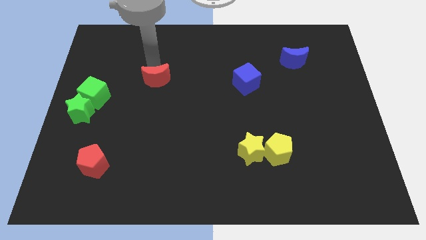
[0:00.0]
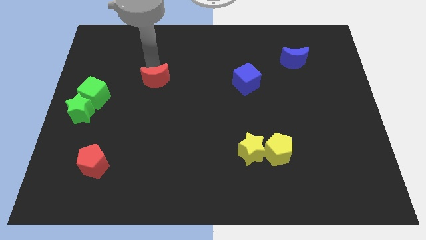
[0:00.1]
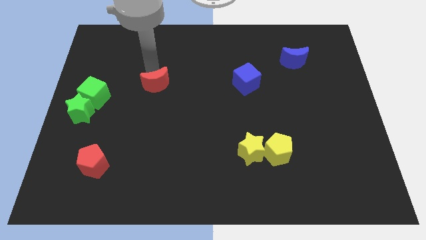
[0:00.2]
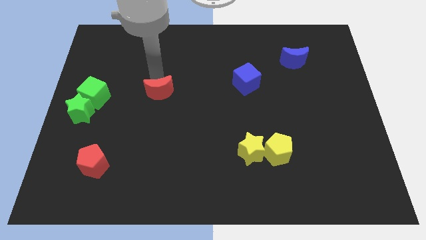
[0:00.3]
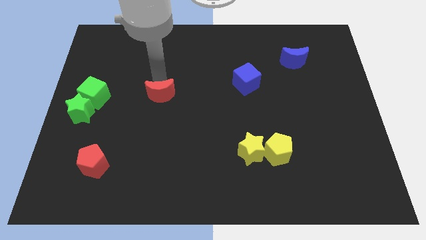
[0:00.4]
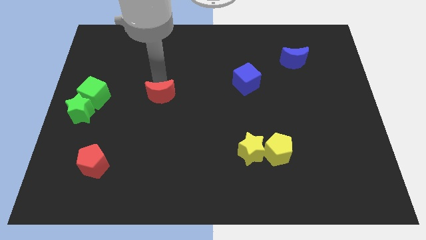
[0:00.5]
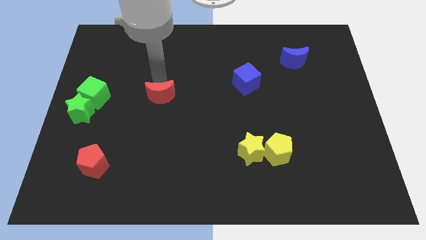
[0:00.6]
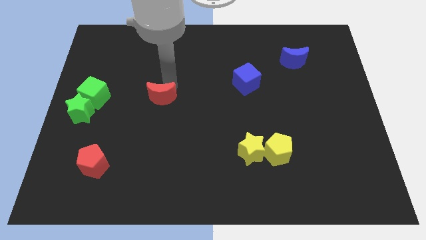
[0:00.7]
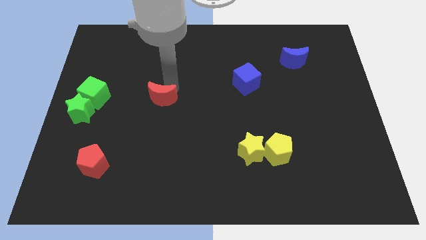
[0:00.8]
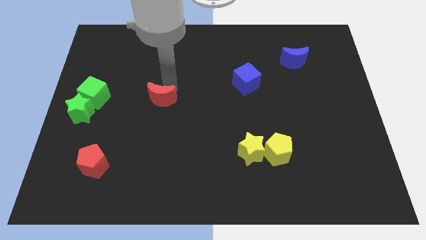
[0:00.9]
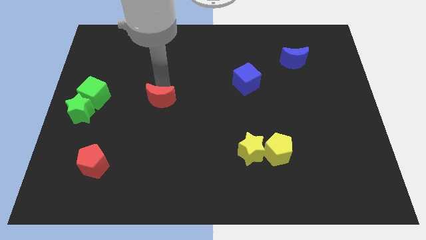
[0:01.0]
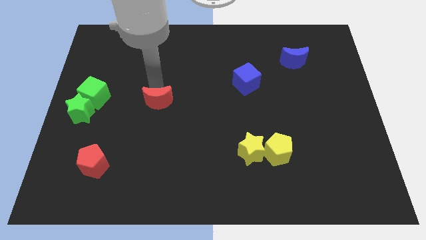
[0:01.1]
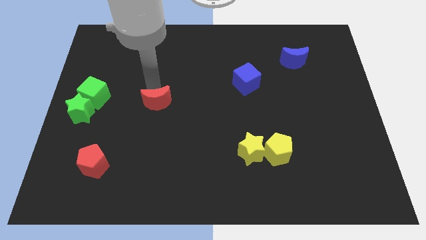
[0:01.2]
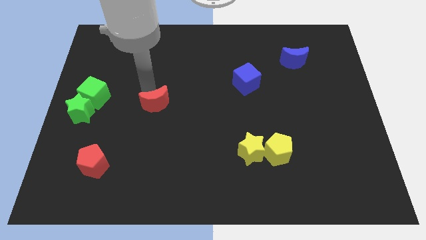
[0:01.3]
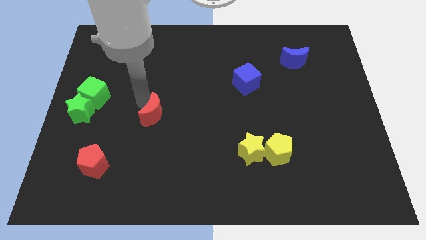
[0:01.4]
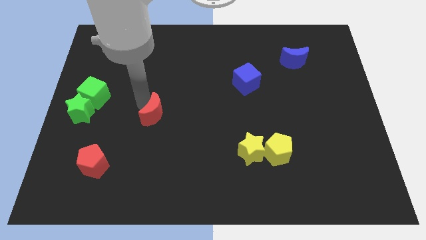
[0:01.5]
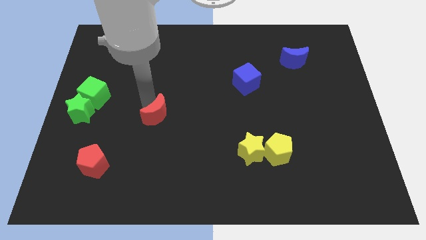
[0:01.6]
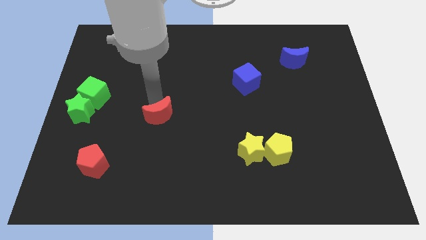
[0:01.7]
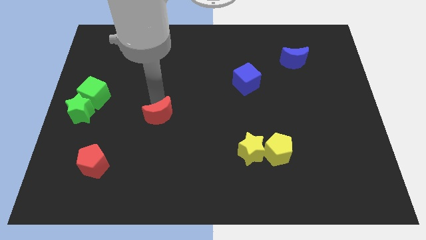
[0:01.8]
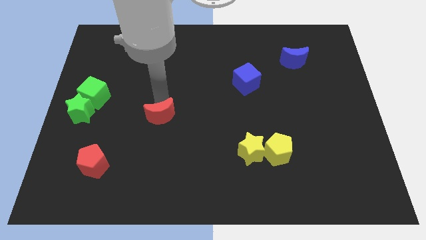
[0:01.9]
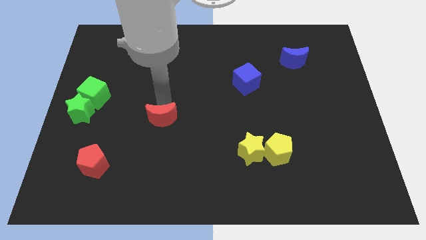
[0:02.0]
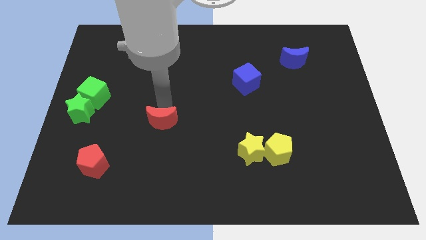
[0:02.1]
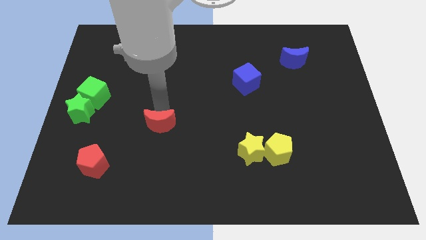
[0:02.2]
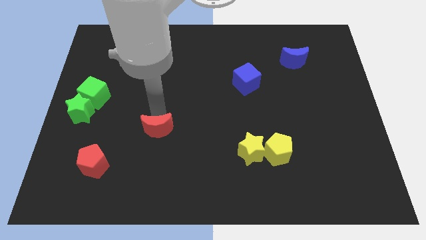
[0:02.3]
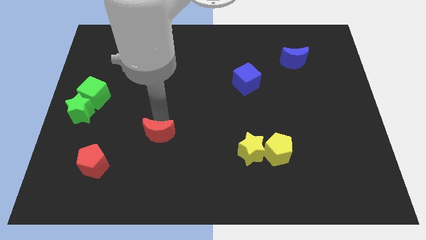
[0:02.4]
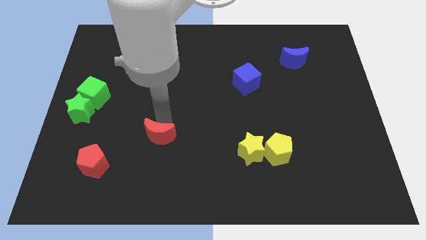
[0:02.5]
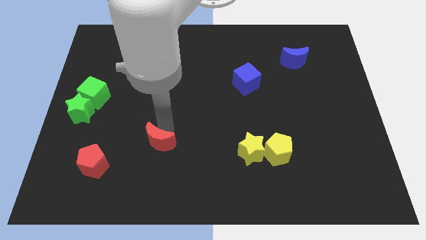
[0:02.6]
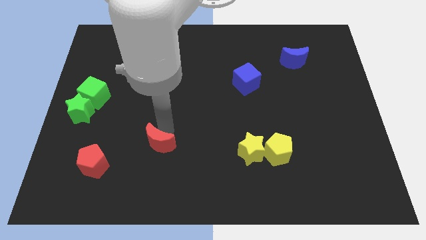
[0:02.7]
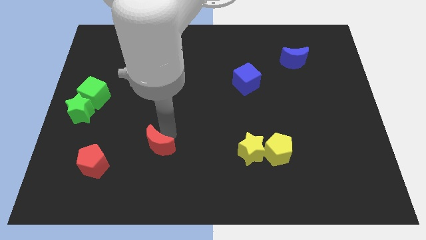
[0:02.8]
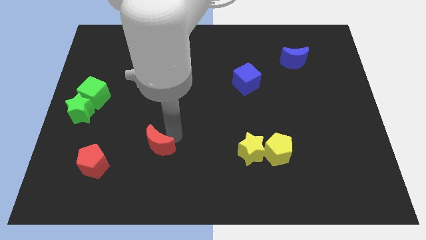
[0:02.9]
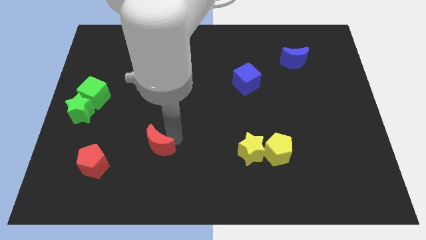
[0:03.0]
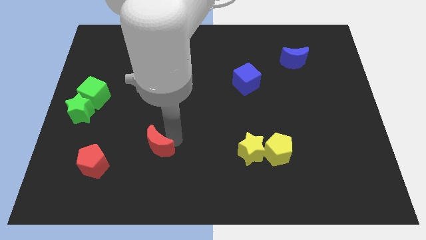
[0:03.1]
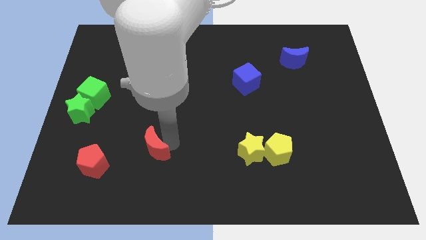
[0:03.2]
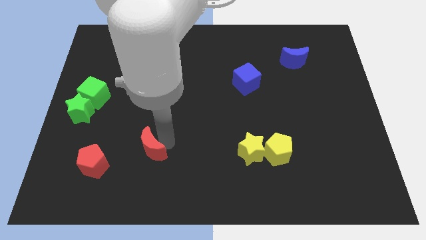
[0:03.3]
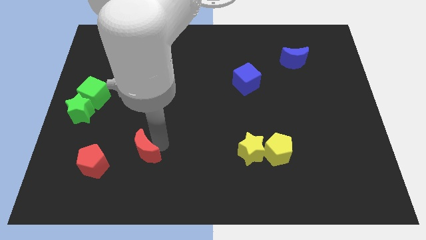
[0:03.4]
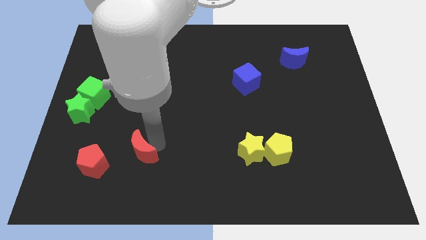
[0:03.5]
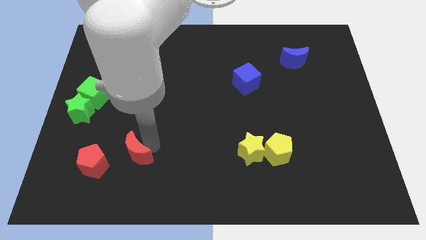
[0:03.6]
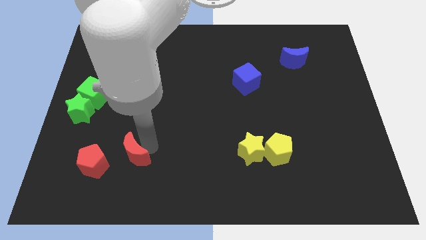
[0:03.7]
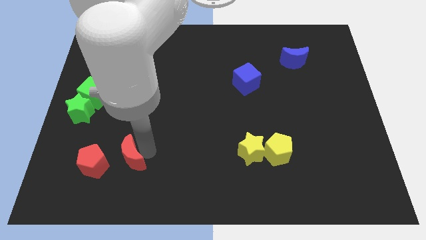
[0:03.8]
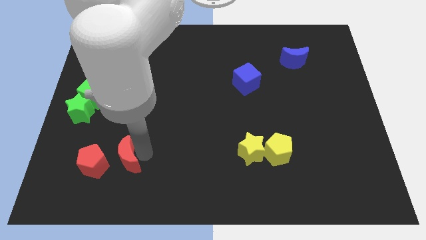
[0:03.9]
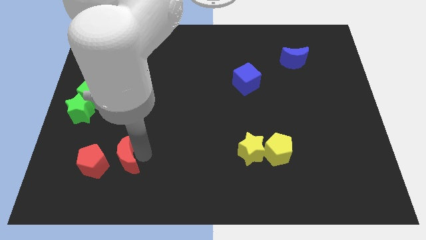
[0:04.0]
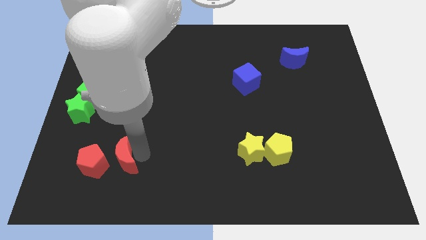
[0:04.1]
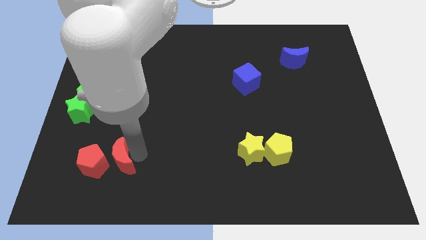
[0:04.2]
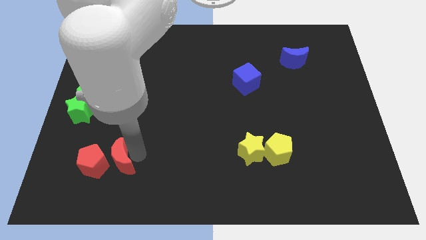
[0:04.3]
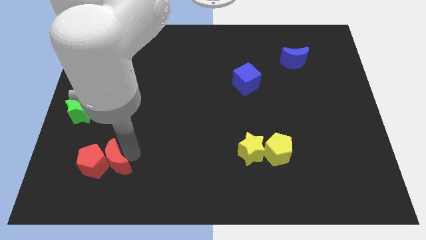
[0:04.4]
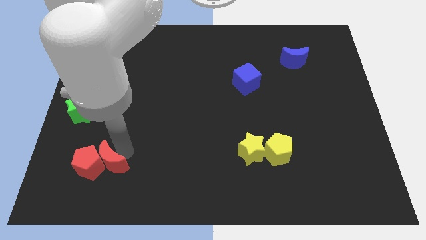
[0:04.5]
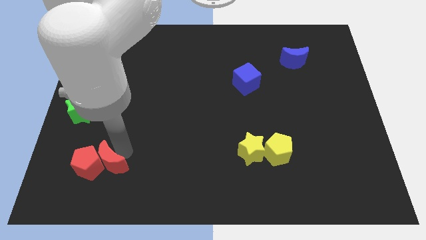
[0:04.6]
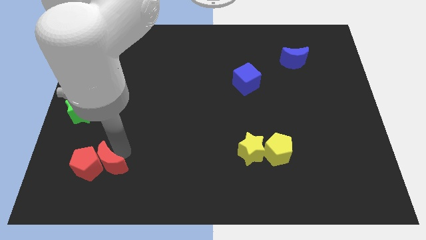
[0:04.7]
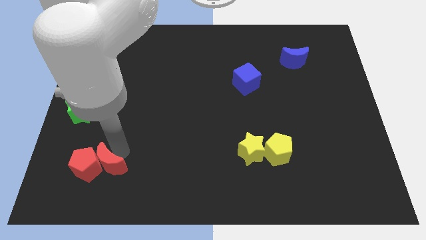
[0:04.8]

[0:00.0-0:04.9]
push the red crescent into the red pentagon

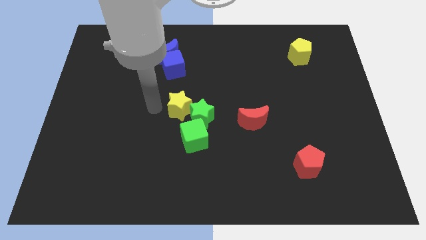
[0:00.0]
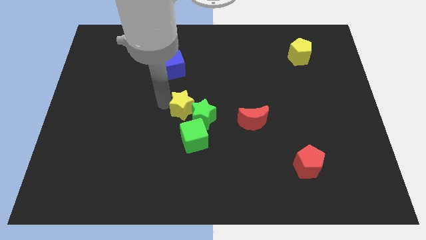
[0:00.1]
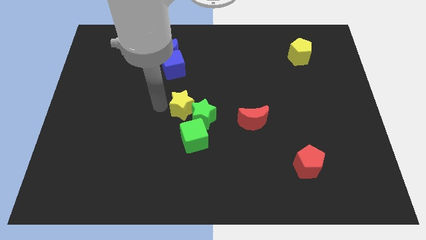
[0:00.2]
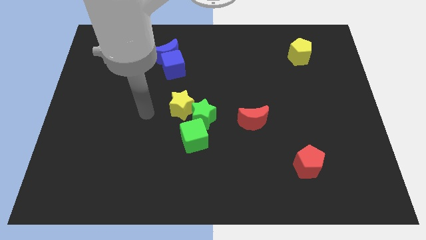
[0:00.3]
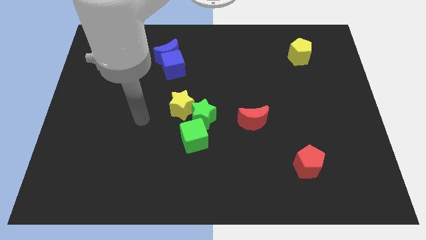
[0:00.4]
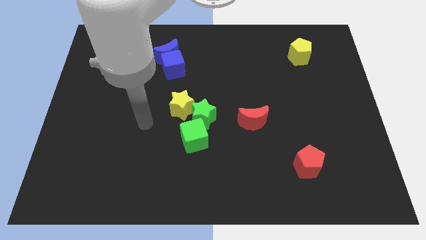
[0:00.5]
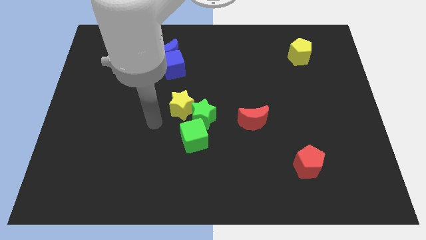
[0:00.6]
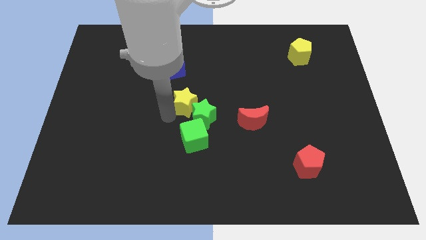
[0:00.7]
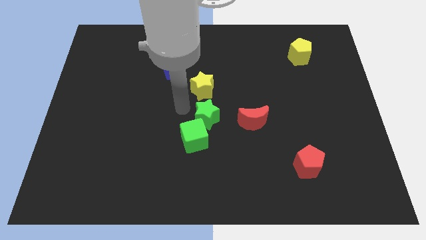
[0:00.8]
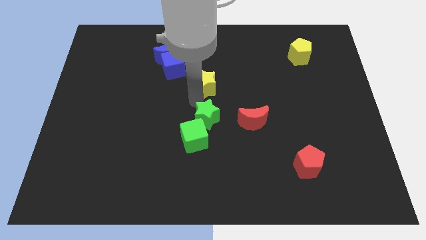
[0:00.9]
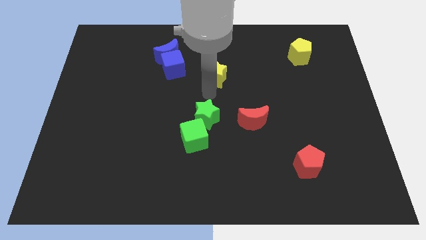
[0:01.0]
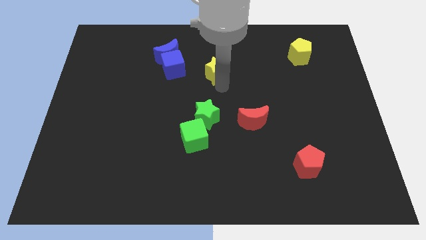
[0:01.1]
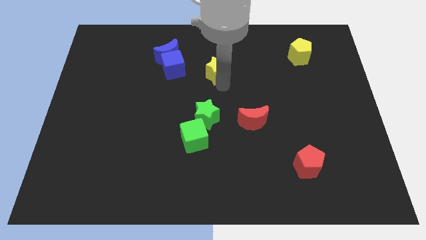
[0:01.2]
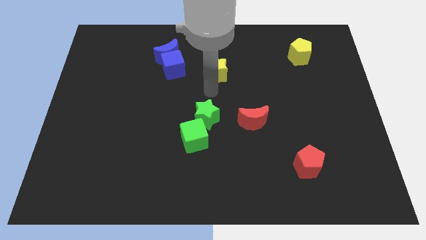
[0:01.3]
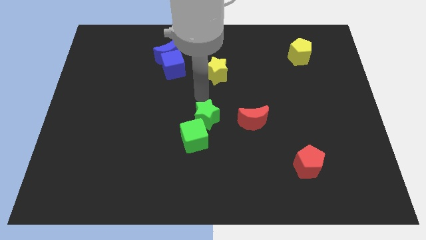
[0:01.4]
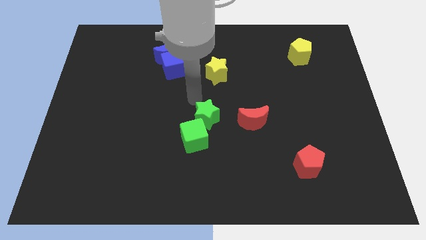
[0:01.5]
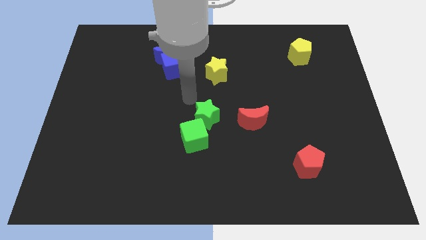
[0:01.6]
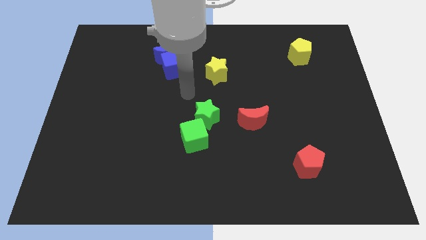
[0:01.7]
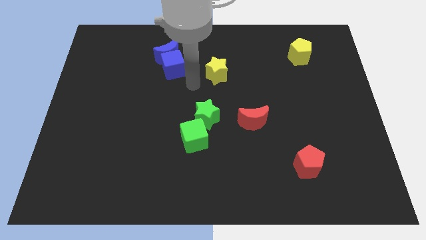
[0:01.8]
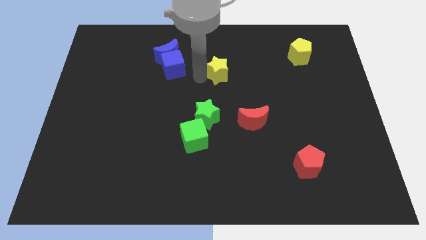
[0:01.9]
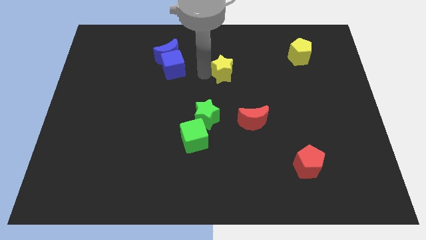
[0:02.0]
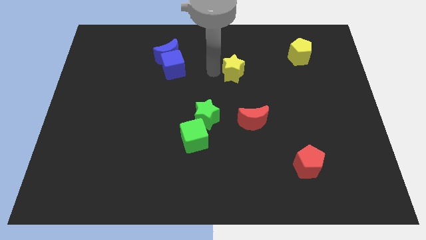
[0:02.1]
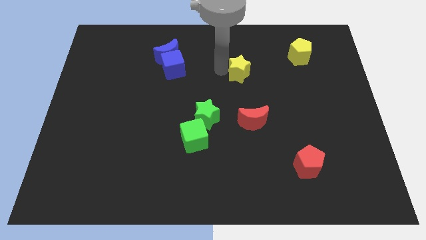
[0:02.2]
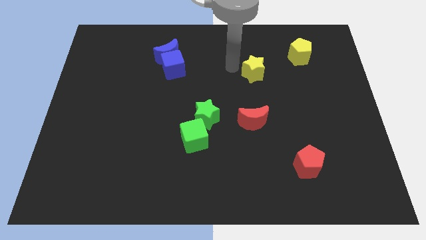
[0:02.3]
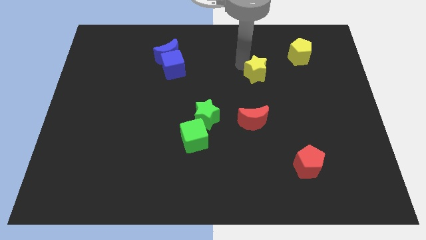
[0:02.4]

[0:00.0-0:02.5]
push yellow star above red crescent

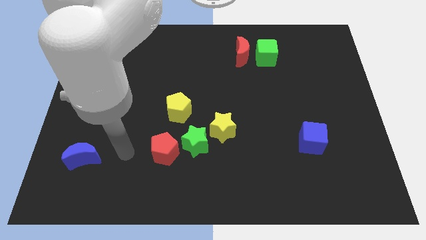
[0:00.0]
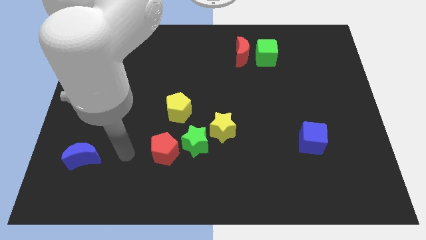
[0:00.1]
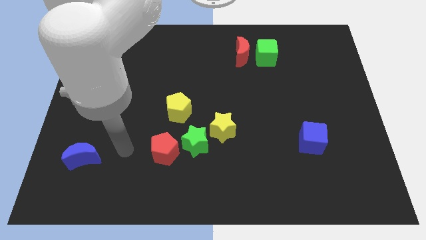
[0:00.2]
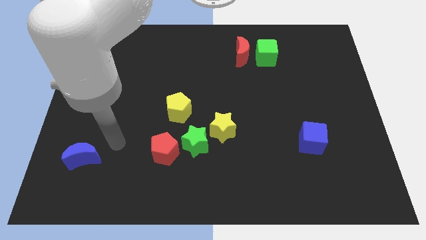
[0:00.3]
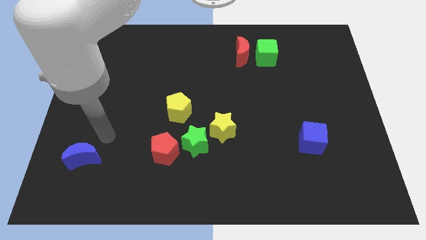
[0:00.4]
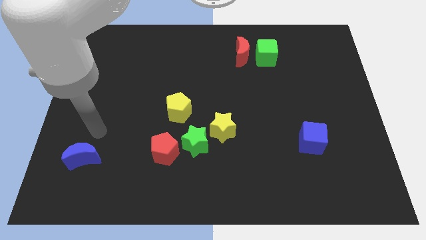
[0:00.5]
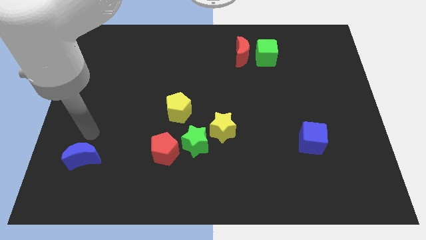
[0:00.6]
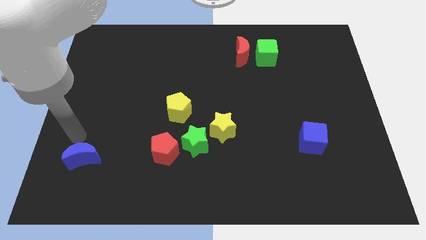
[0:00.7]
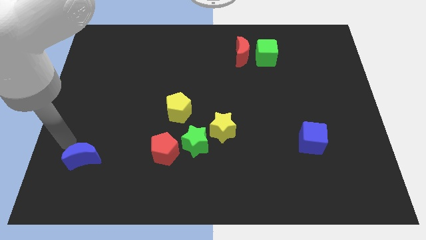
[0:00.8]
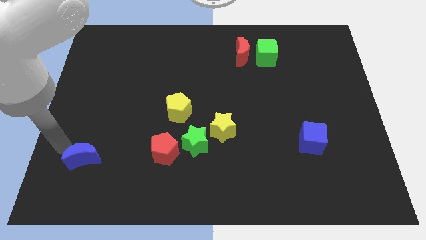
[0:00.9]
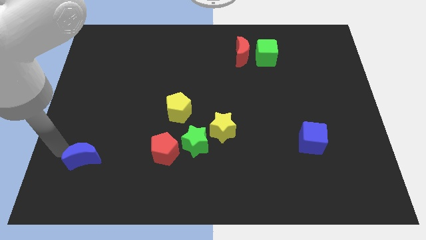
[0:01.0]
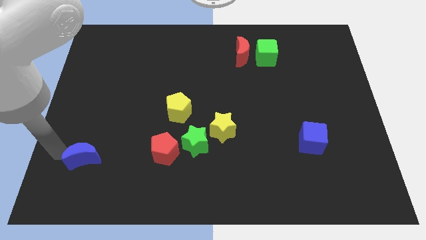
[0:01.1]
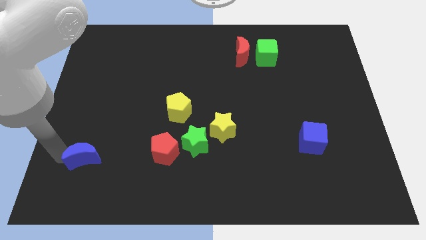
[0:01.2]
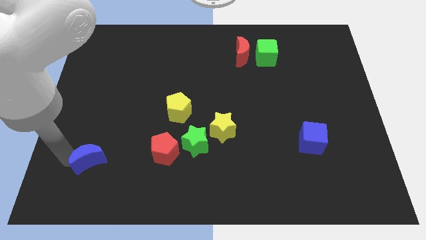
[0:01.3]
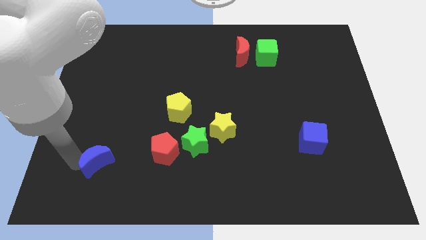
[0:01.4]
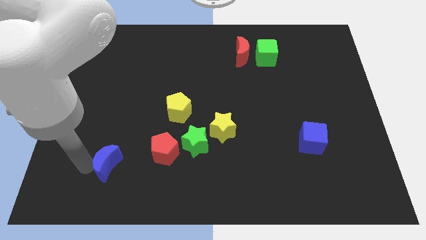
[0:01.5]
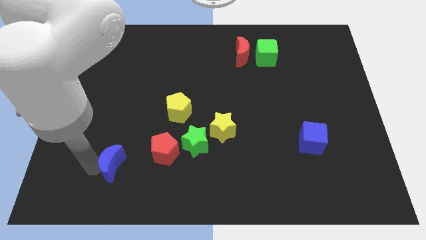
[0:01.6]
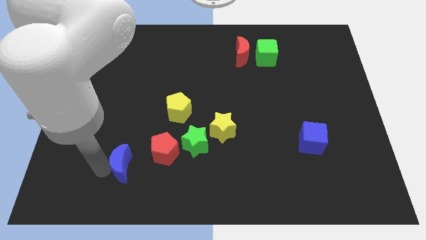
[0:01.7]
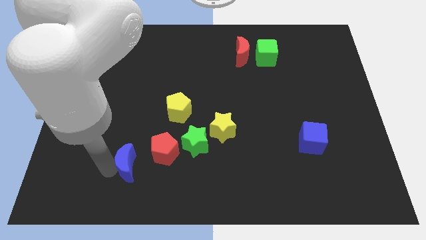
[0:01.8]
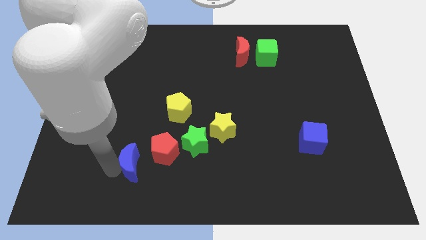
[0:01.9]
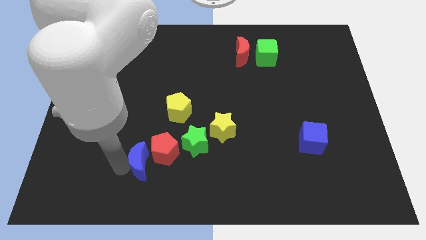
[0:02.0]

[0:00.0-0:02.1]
move the blue crescent towards the red pentagon
